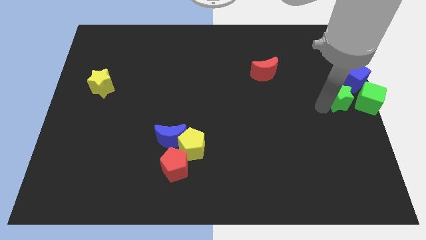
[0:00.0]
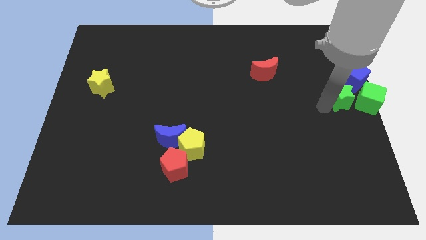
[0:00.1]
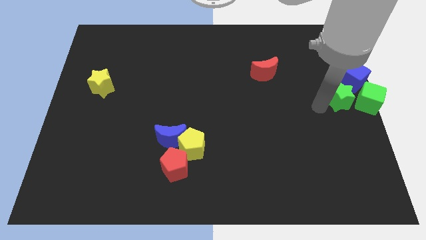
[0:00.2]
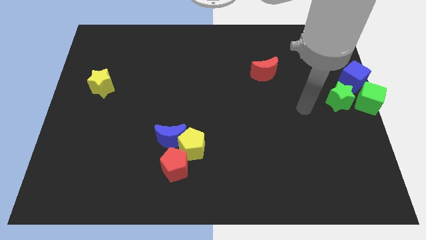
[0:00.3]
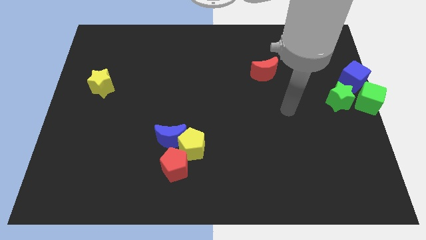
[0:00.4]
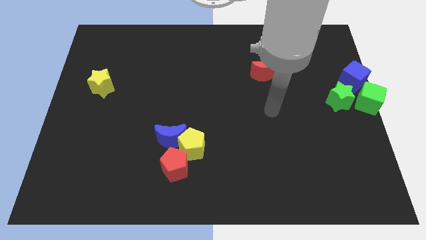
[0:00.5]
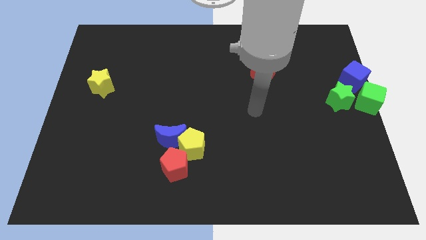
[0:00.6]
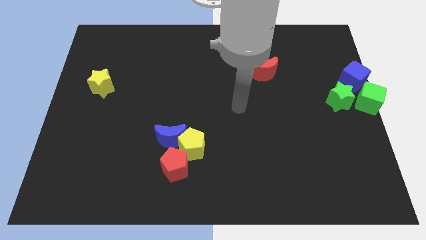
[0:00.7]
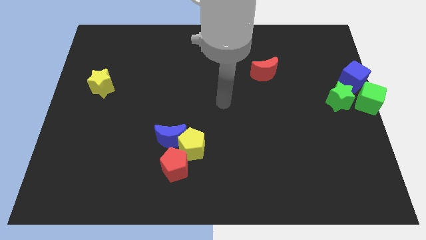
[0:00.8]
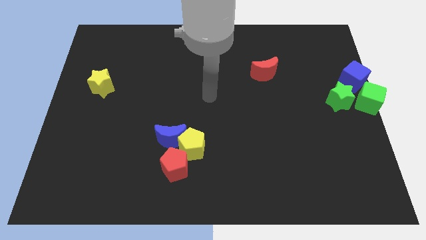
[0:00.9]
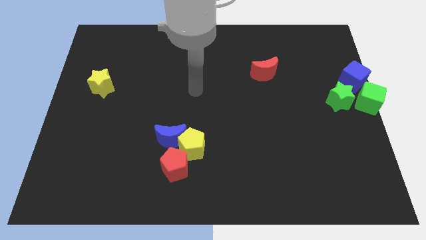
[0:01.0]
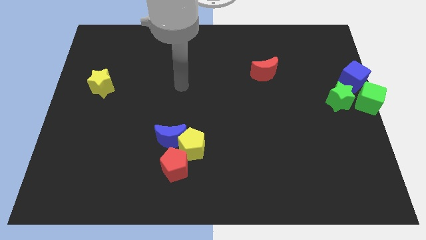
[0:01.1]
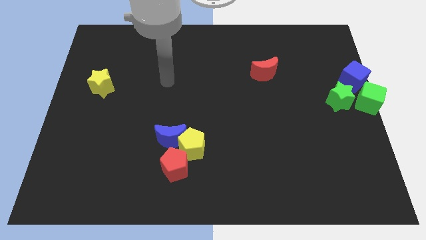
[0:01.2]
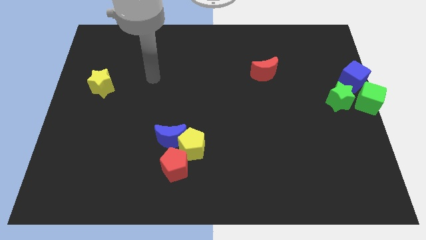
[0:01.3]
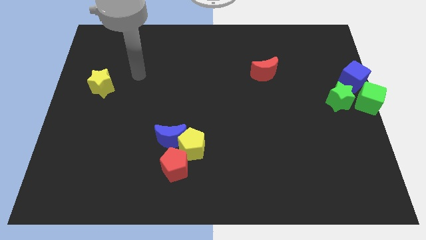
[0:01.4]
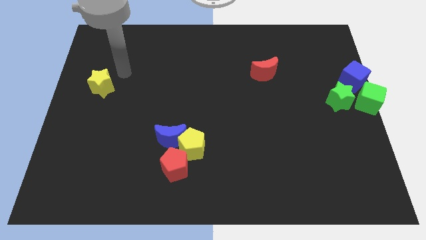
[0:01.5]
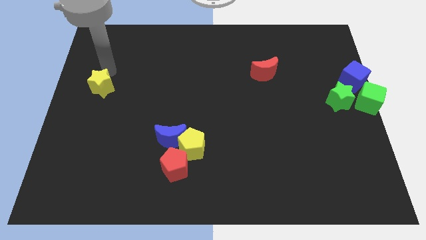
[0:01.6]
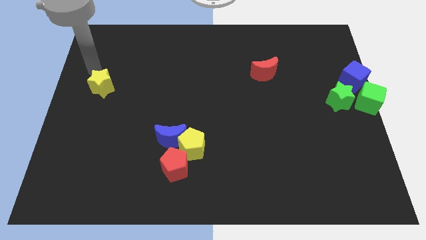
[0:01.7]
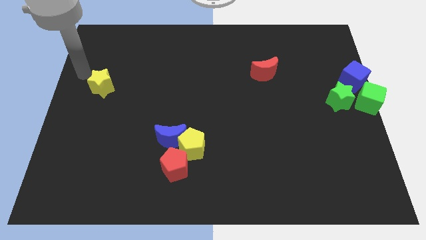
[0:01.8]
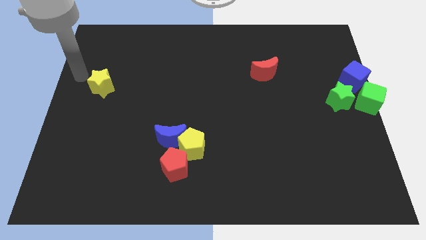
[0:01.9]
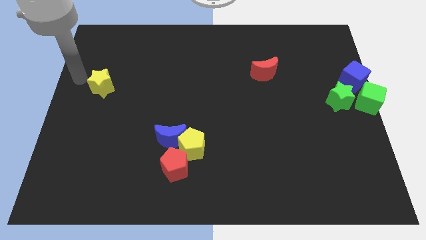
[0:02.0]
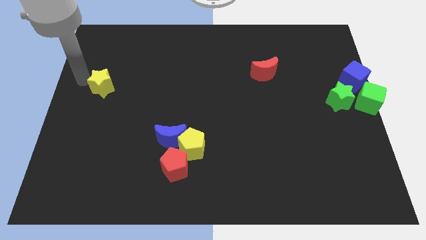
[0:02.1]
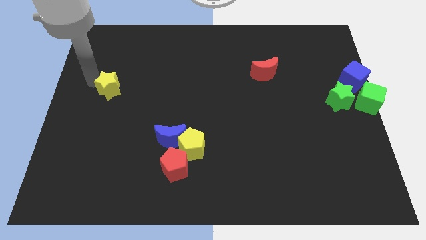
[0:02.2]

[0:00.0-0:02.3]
go away from the green star

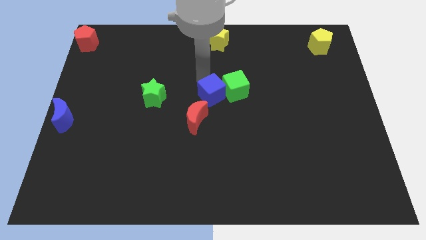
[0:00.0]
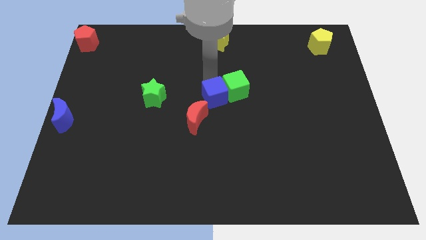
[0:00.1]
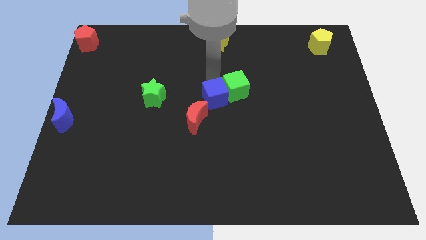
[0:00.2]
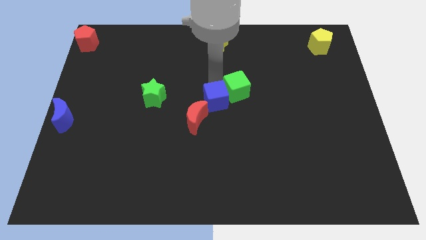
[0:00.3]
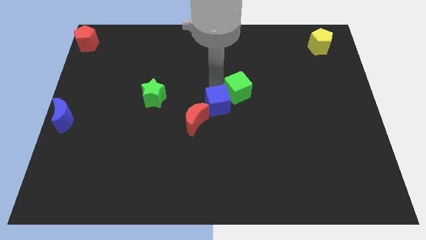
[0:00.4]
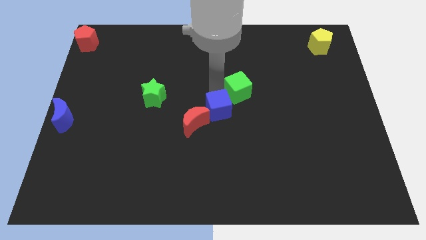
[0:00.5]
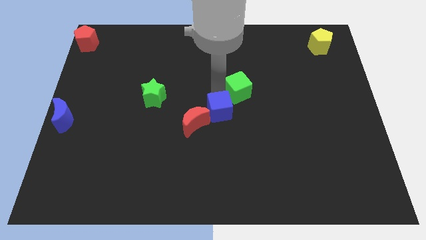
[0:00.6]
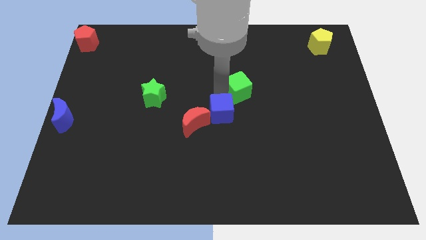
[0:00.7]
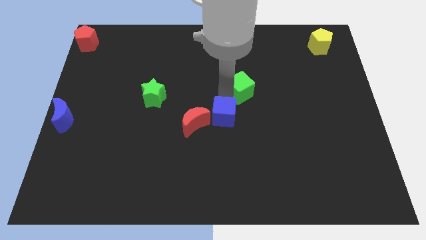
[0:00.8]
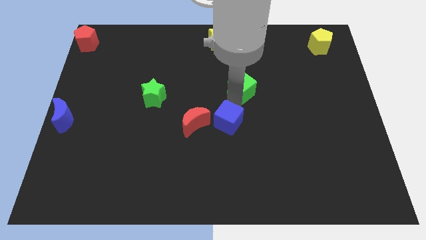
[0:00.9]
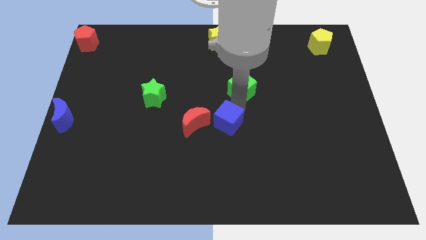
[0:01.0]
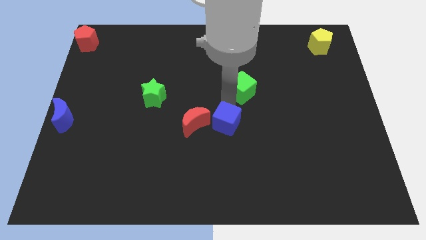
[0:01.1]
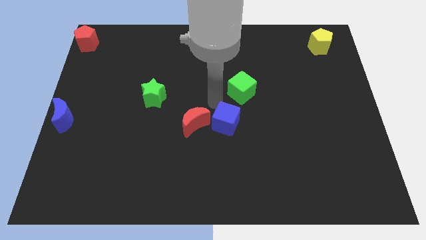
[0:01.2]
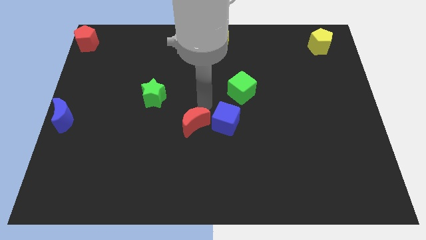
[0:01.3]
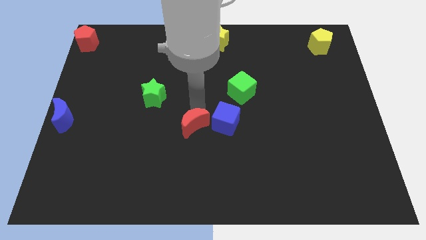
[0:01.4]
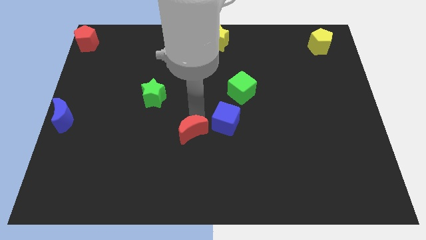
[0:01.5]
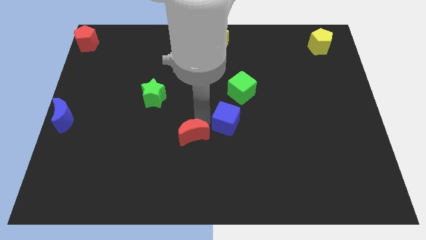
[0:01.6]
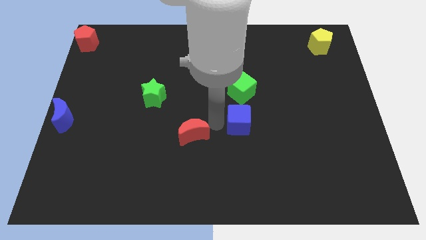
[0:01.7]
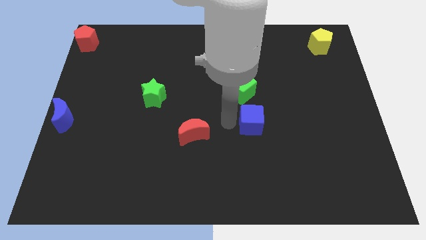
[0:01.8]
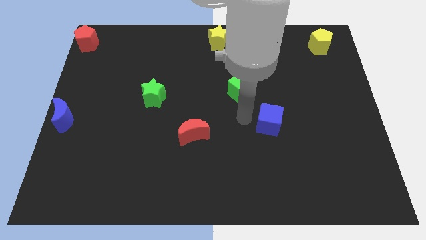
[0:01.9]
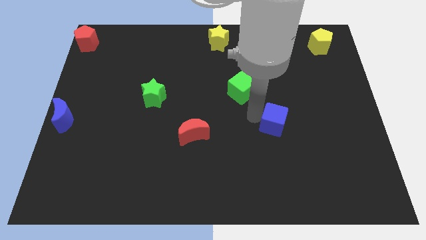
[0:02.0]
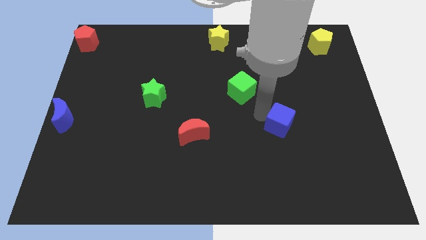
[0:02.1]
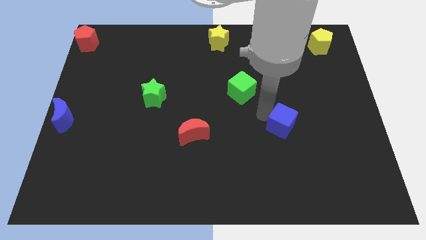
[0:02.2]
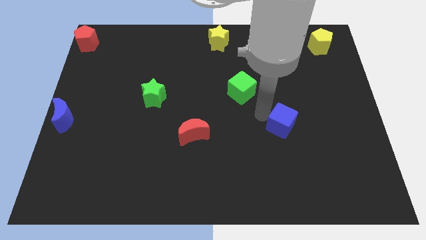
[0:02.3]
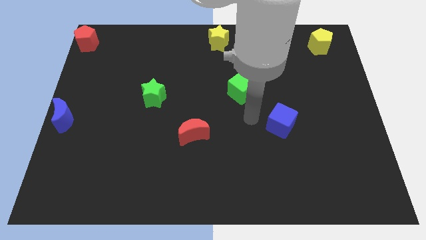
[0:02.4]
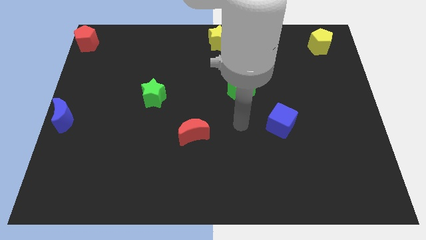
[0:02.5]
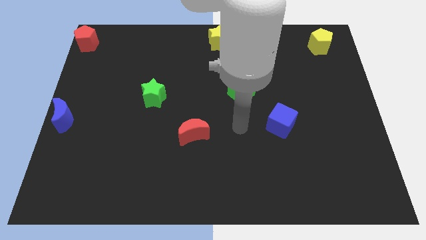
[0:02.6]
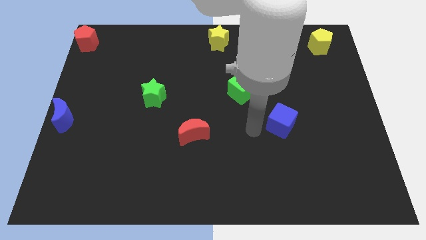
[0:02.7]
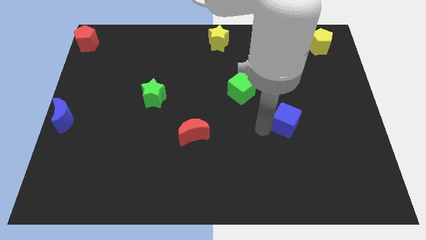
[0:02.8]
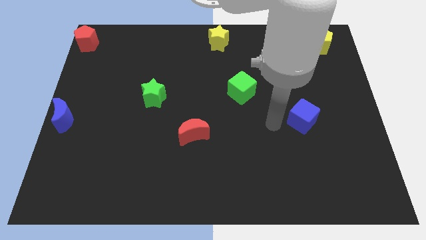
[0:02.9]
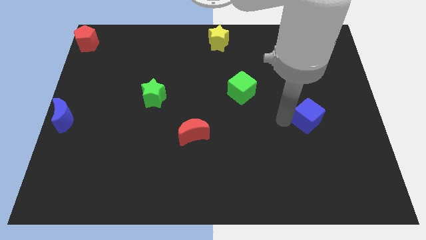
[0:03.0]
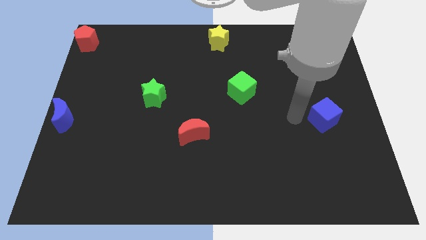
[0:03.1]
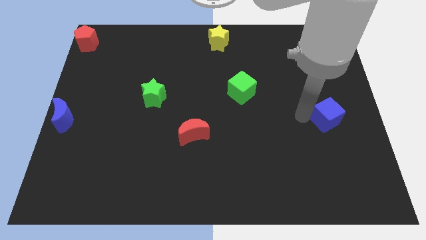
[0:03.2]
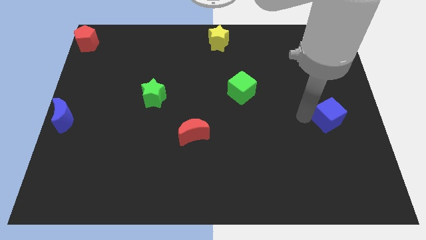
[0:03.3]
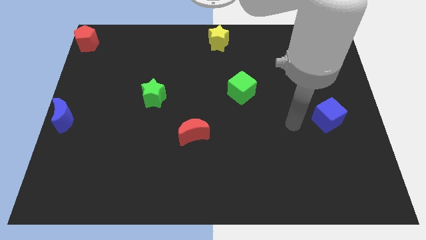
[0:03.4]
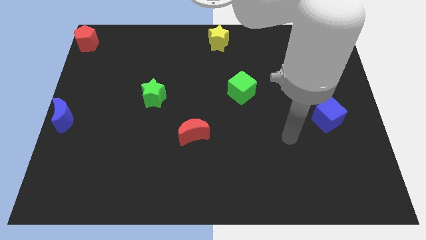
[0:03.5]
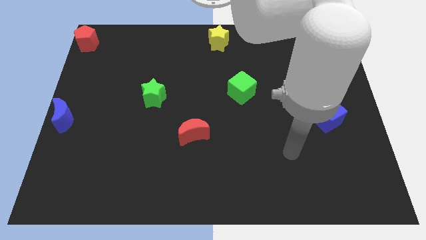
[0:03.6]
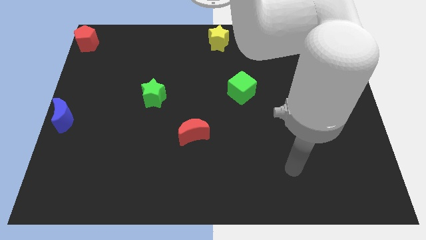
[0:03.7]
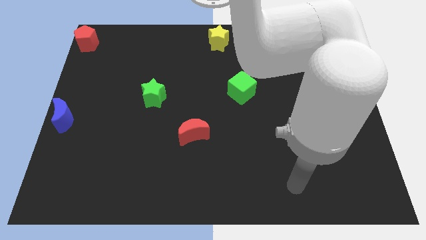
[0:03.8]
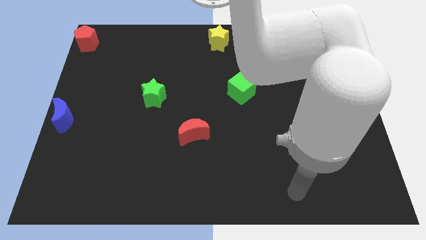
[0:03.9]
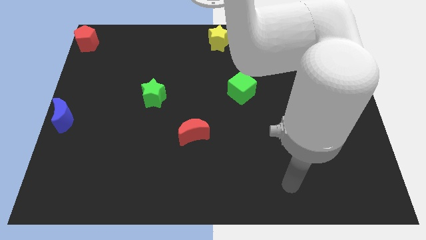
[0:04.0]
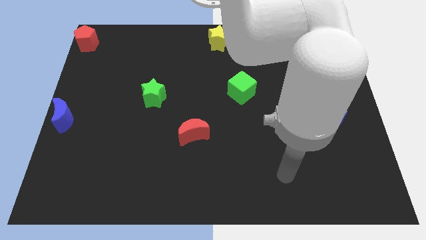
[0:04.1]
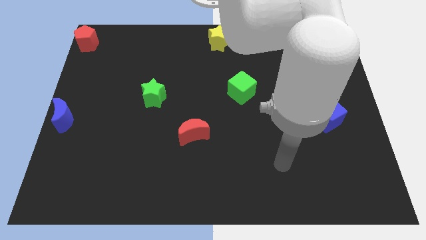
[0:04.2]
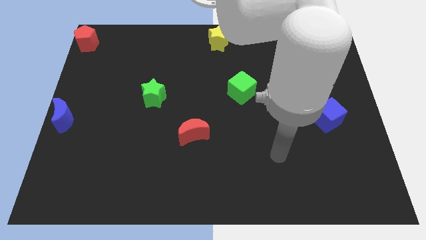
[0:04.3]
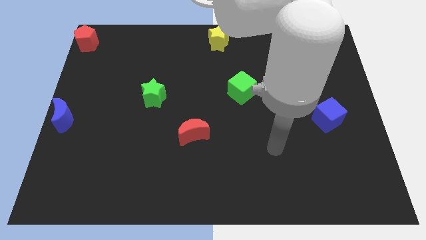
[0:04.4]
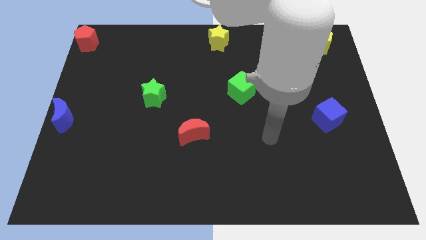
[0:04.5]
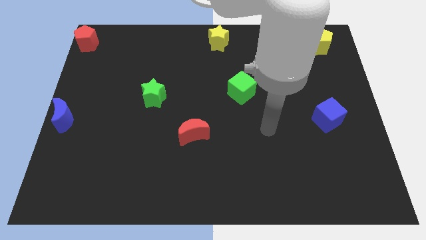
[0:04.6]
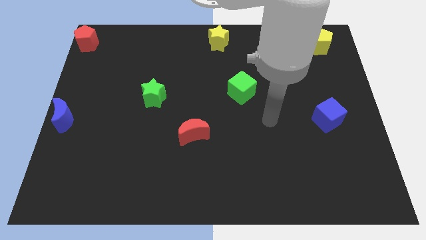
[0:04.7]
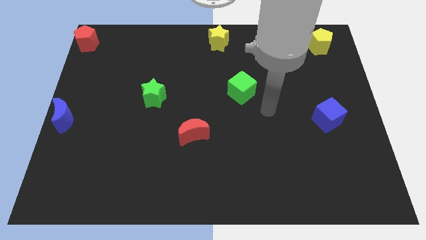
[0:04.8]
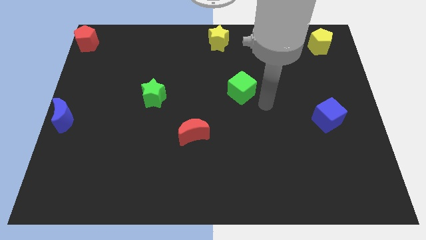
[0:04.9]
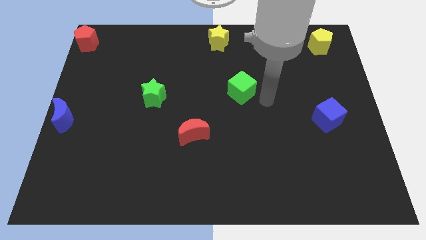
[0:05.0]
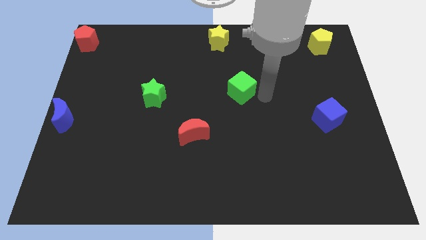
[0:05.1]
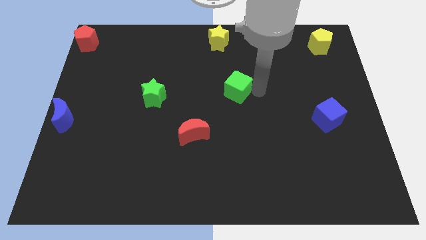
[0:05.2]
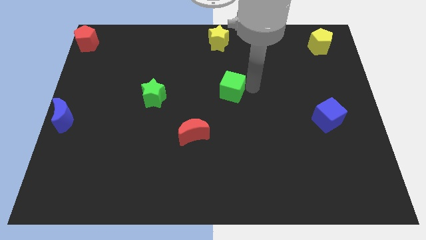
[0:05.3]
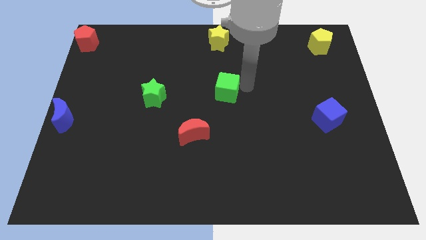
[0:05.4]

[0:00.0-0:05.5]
drag the blue cube towards the center right of the board

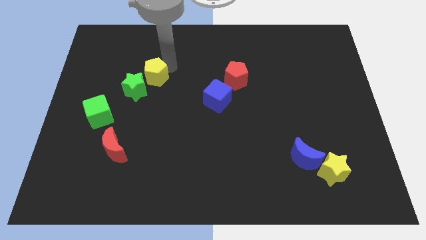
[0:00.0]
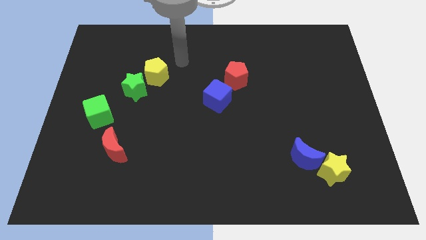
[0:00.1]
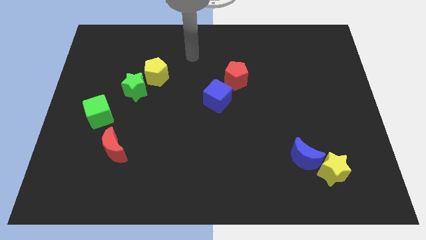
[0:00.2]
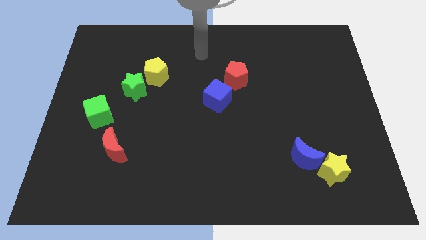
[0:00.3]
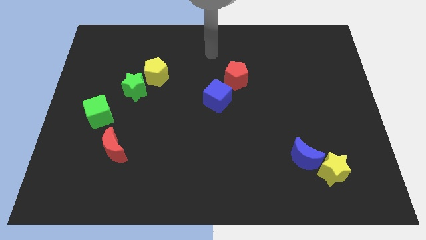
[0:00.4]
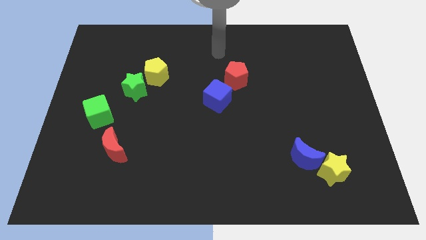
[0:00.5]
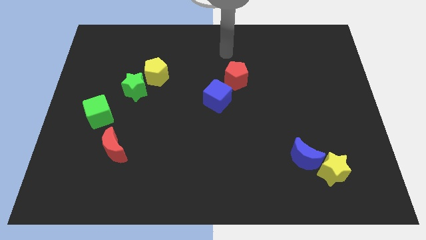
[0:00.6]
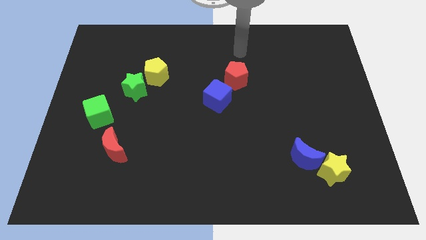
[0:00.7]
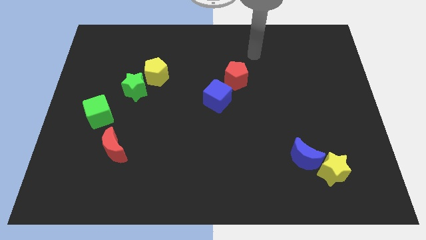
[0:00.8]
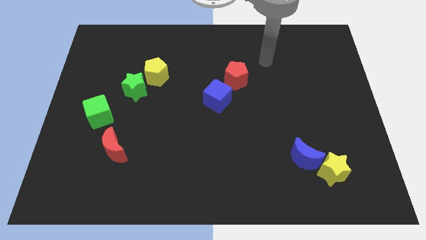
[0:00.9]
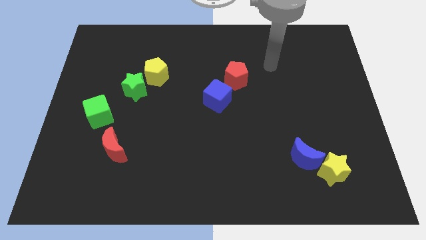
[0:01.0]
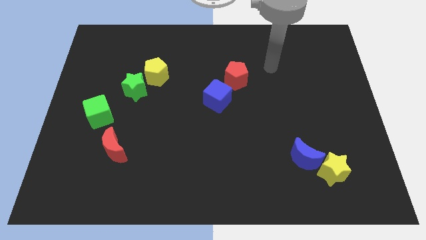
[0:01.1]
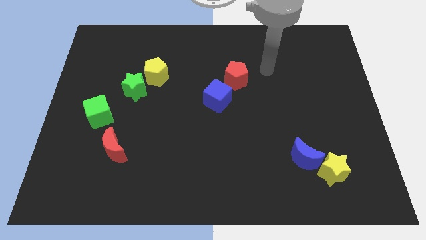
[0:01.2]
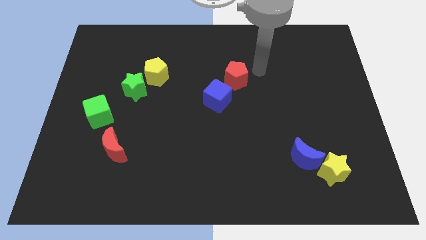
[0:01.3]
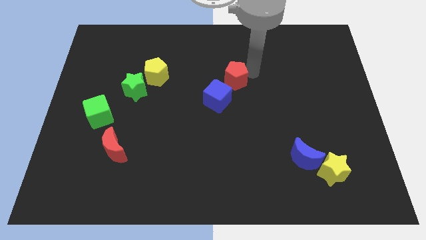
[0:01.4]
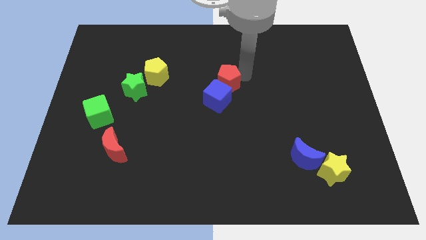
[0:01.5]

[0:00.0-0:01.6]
tap the right side of the red pentagon
